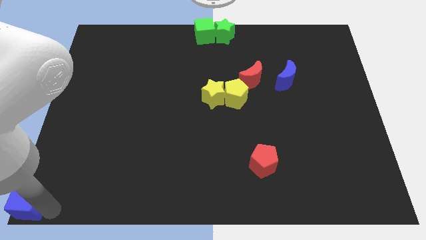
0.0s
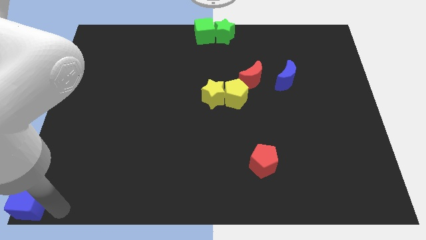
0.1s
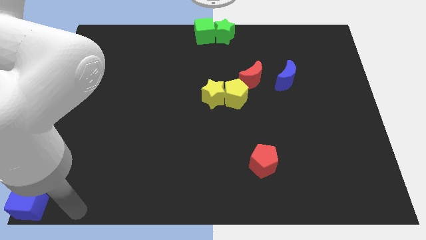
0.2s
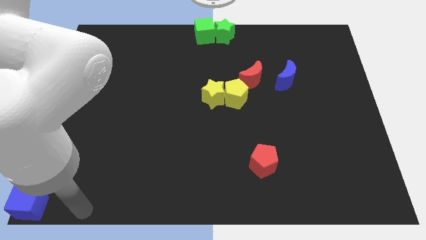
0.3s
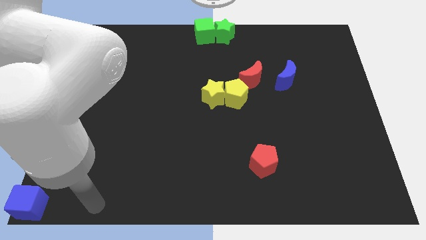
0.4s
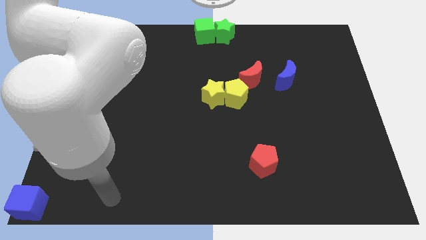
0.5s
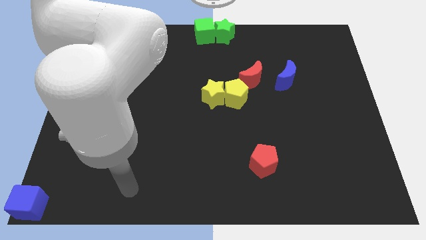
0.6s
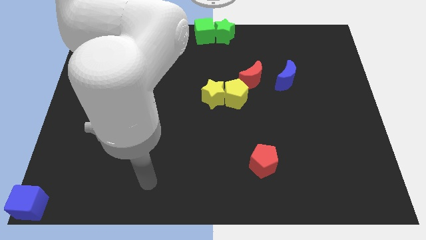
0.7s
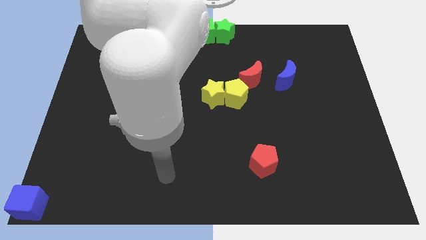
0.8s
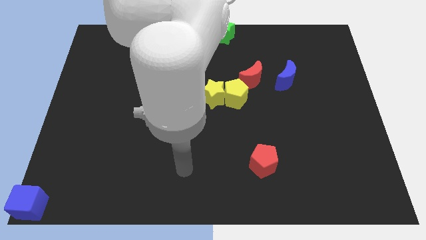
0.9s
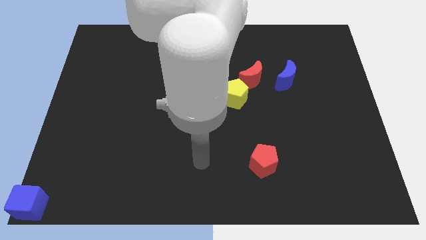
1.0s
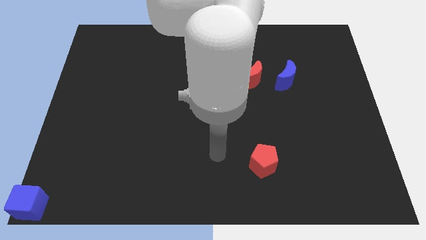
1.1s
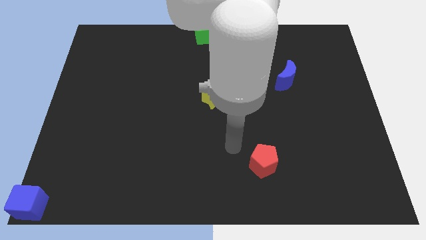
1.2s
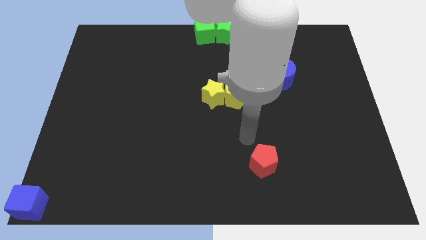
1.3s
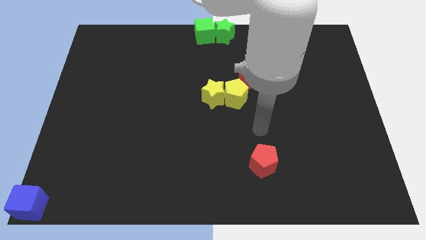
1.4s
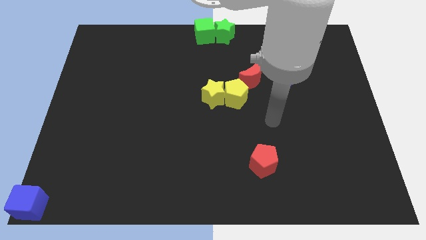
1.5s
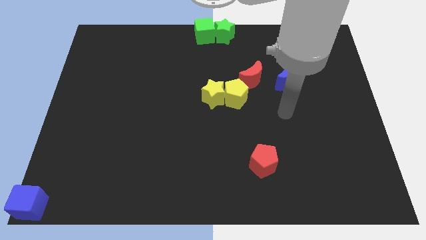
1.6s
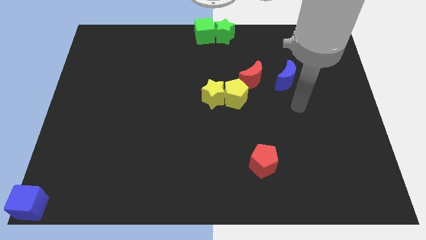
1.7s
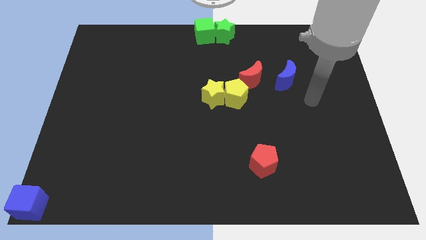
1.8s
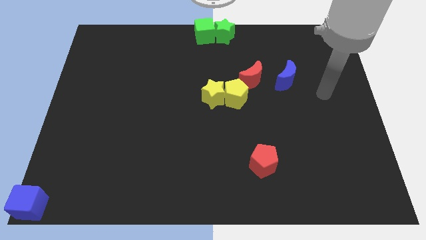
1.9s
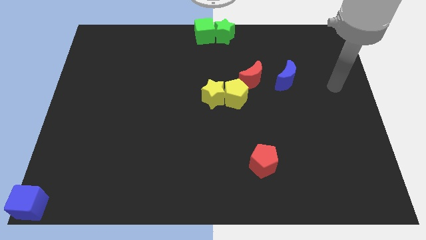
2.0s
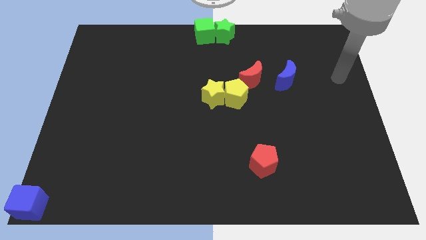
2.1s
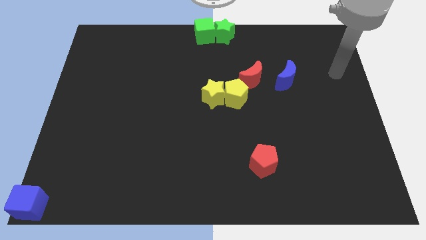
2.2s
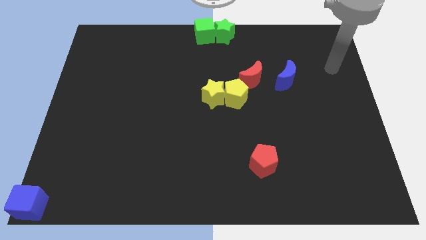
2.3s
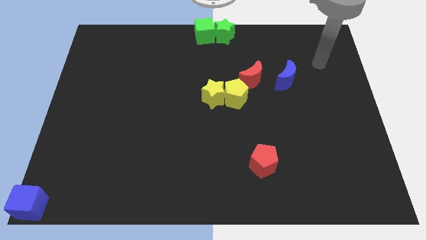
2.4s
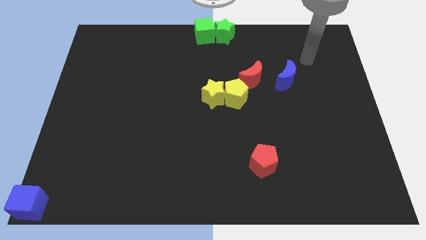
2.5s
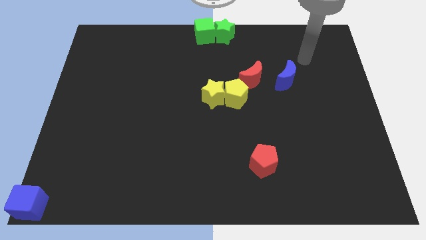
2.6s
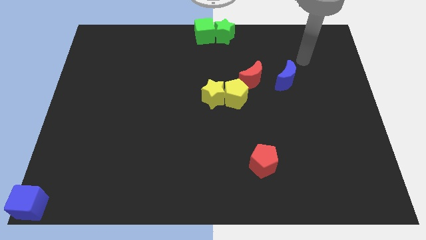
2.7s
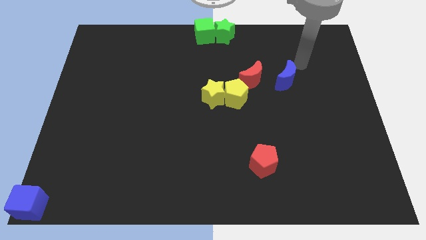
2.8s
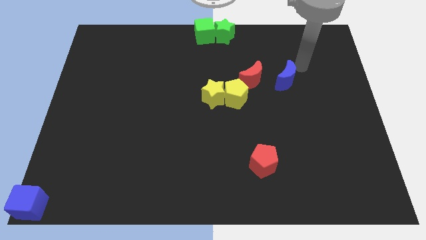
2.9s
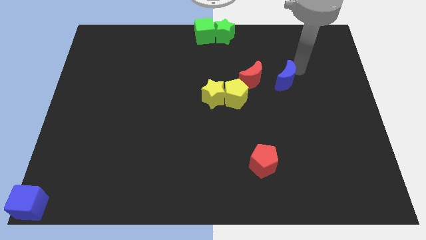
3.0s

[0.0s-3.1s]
point your arm at the top right side of blue moon

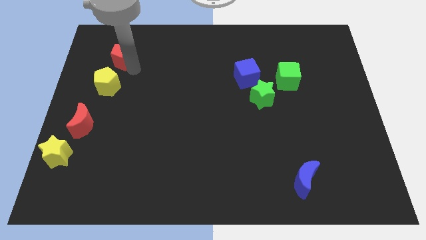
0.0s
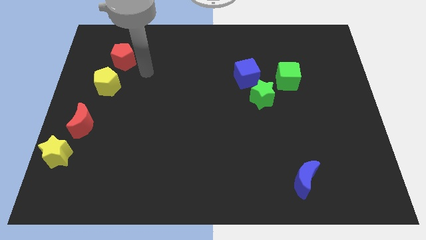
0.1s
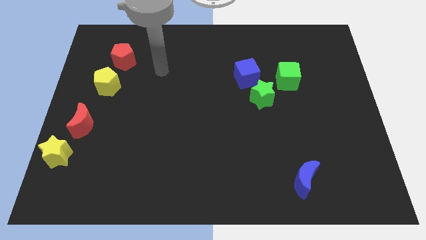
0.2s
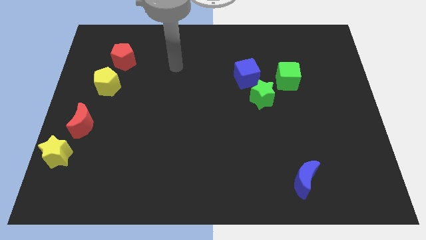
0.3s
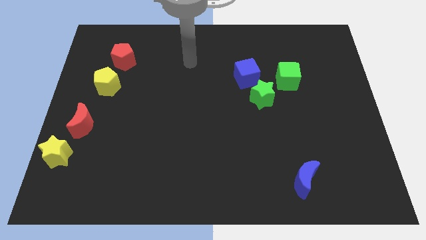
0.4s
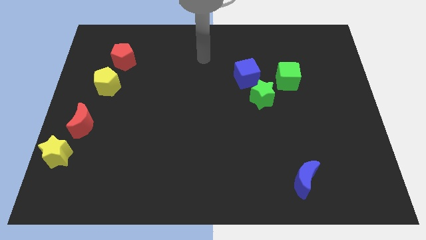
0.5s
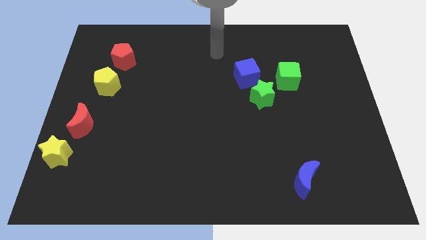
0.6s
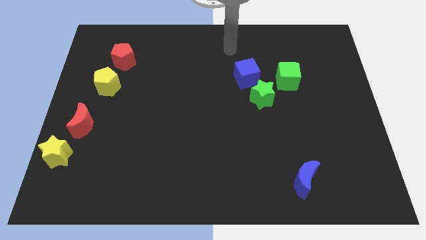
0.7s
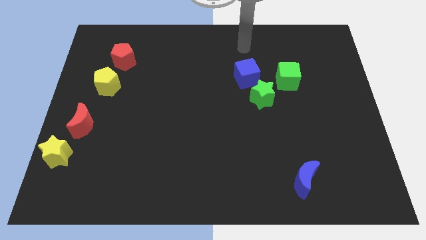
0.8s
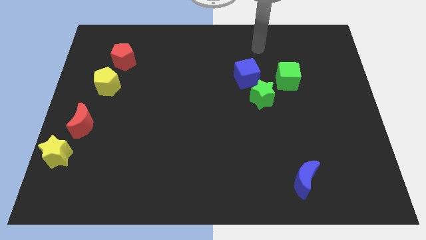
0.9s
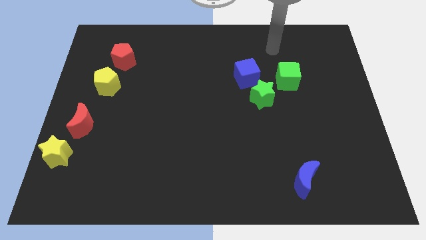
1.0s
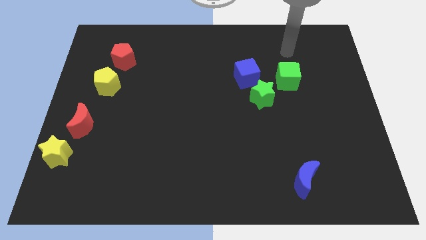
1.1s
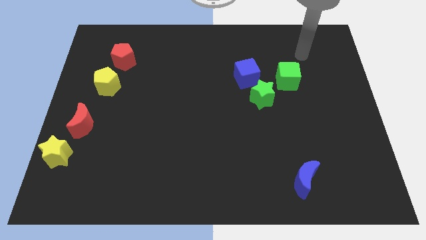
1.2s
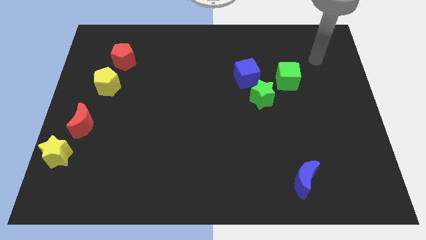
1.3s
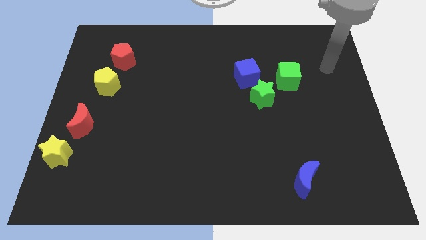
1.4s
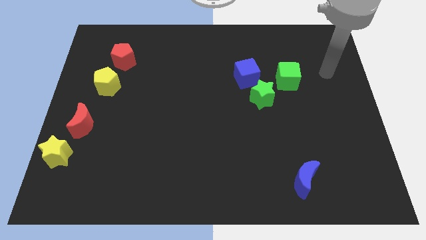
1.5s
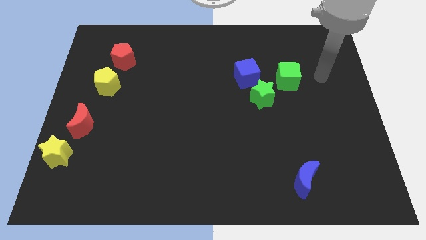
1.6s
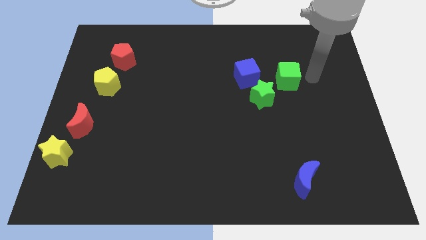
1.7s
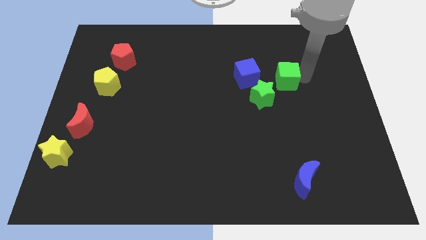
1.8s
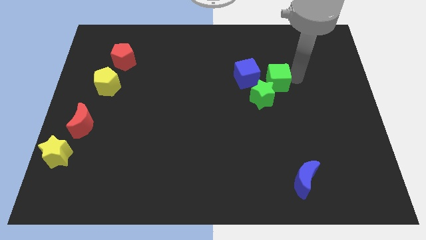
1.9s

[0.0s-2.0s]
tap the right side of the green cube

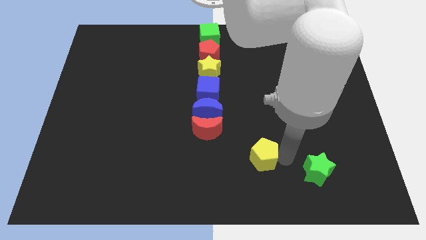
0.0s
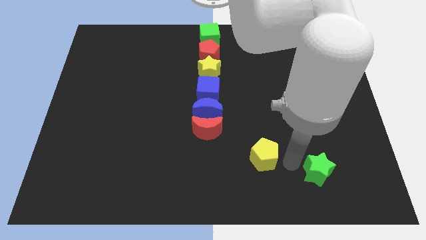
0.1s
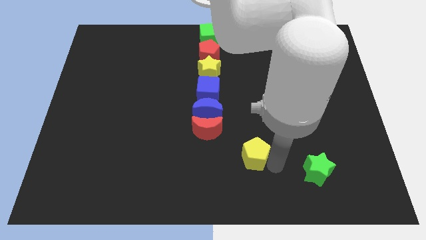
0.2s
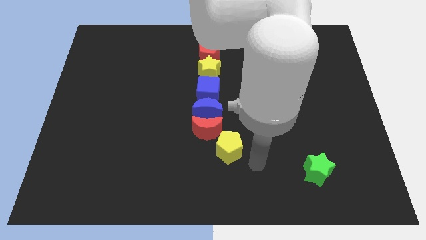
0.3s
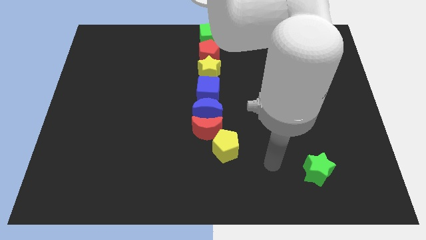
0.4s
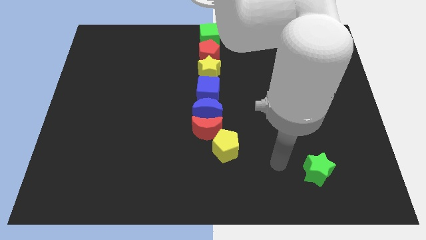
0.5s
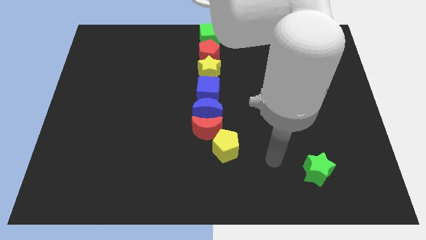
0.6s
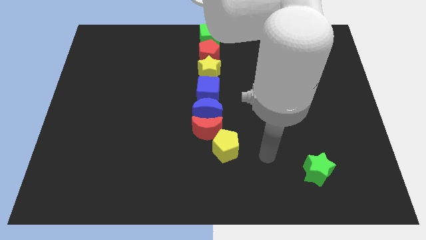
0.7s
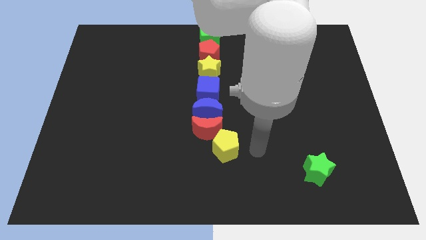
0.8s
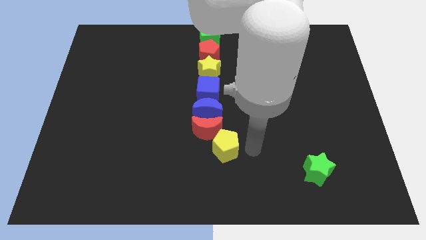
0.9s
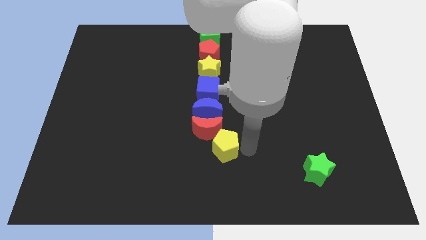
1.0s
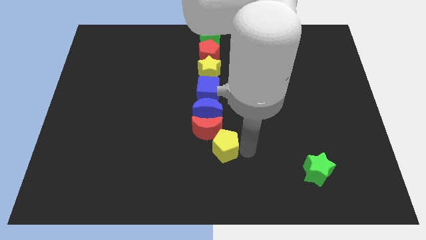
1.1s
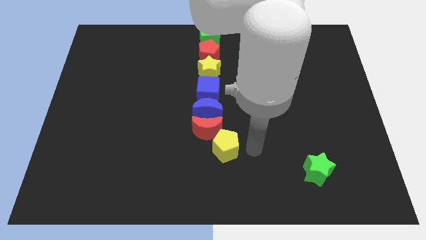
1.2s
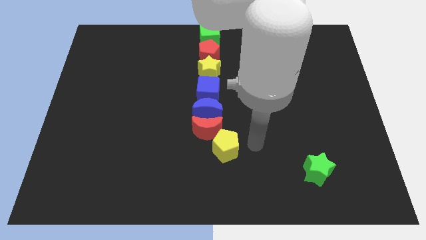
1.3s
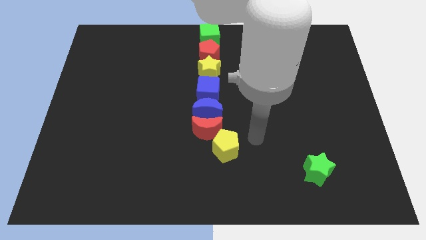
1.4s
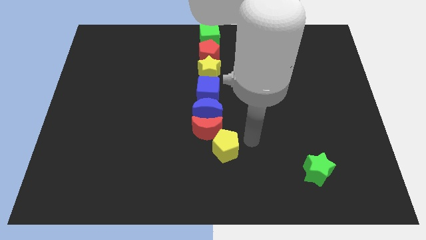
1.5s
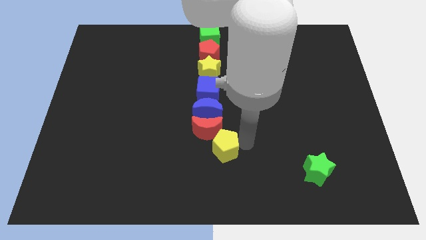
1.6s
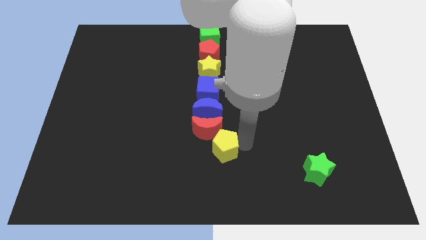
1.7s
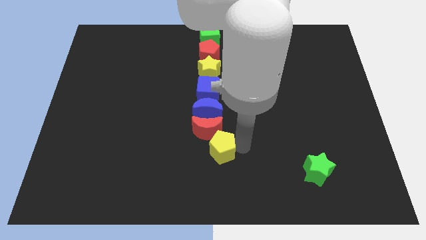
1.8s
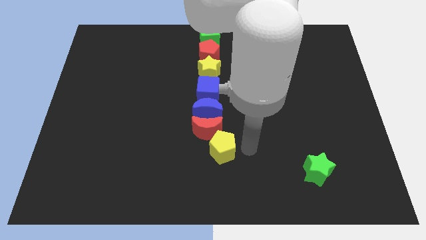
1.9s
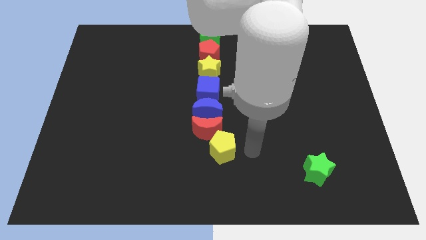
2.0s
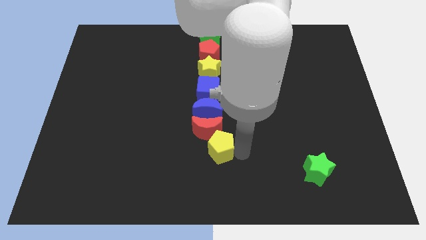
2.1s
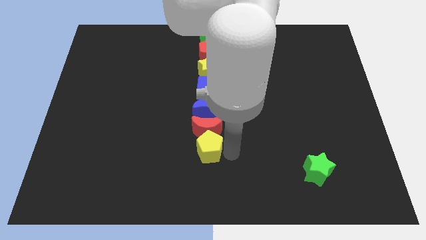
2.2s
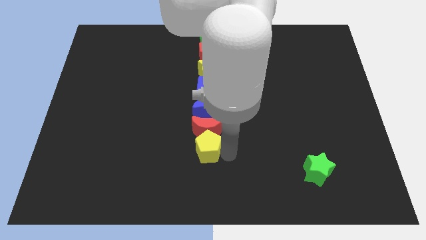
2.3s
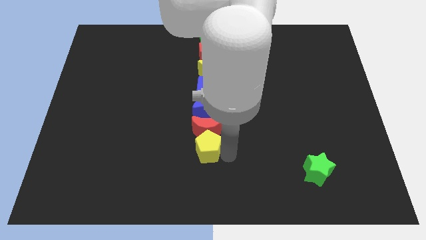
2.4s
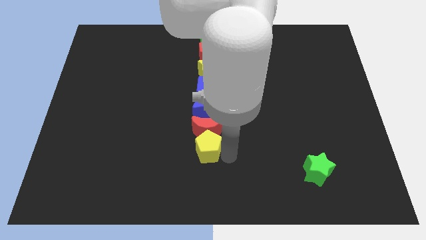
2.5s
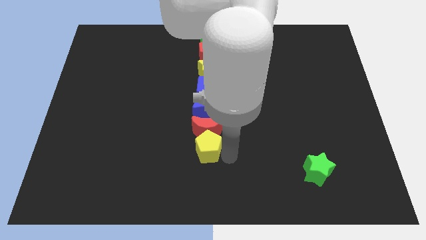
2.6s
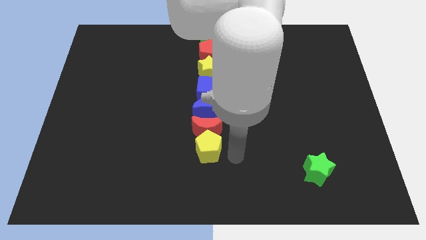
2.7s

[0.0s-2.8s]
push the yellow pentagon to the bottom of the red crescent

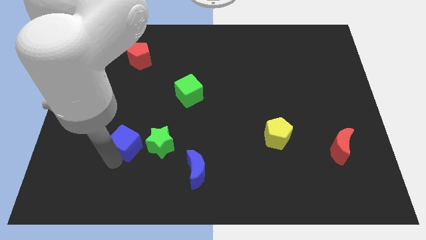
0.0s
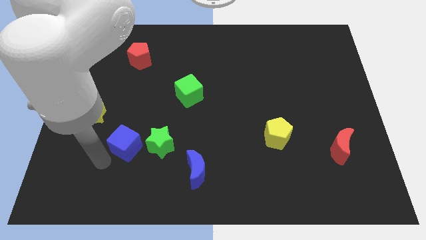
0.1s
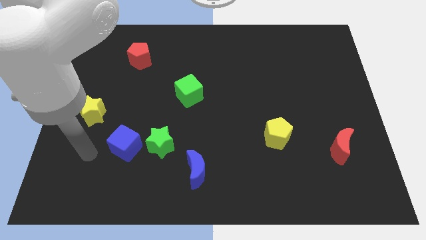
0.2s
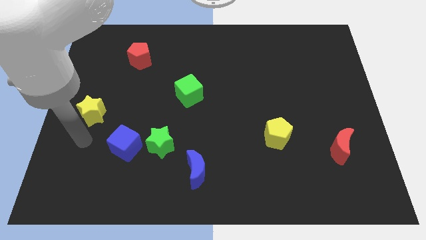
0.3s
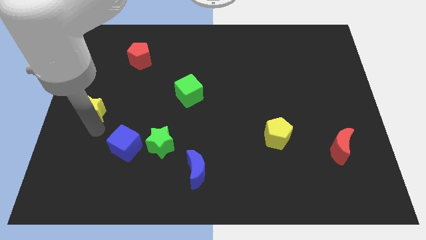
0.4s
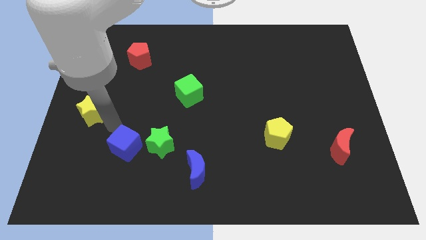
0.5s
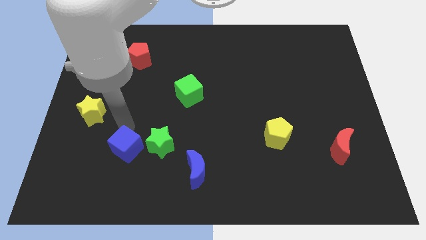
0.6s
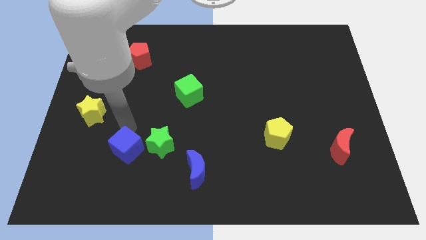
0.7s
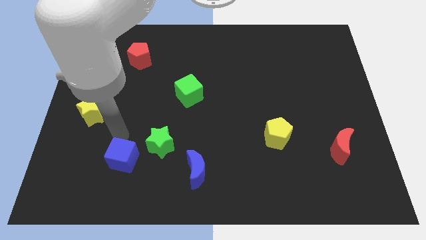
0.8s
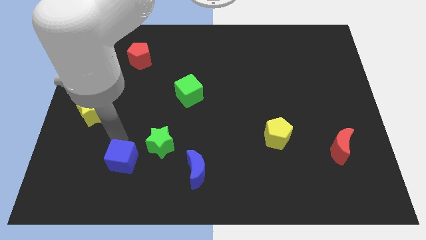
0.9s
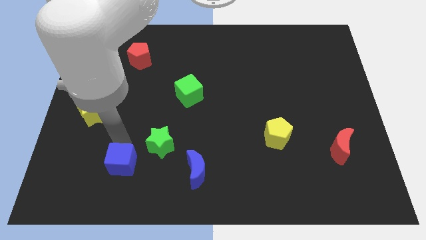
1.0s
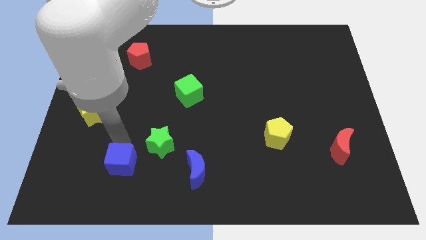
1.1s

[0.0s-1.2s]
move the arm towards the top side of the blue cube
